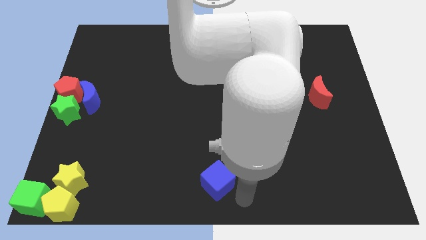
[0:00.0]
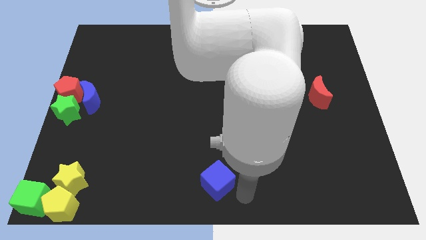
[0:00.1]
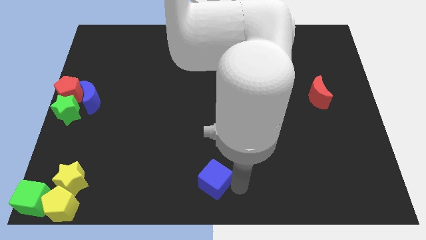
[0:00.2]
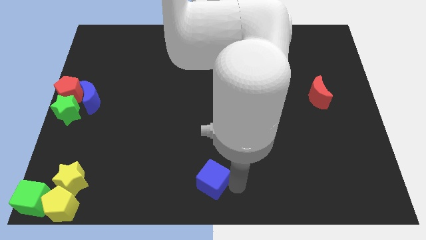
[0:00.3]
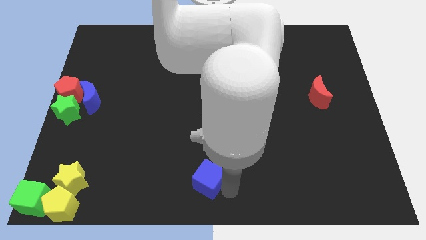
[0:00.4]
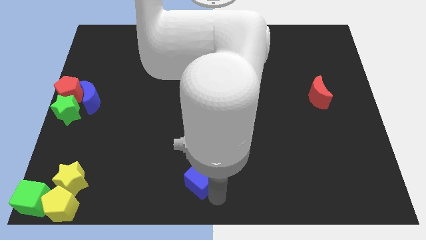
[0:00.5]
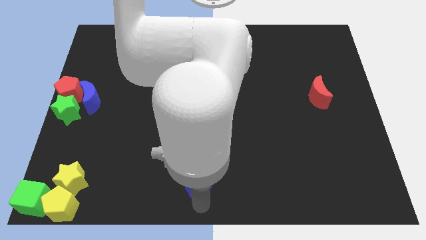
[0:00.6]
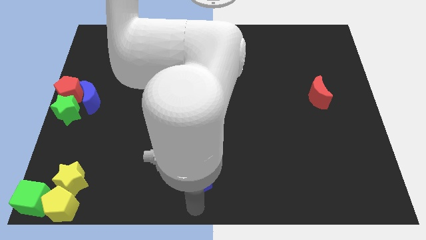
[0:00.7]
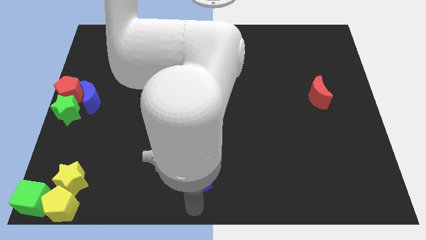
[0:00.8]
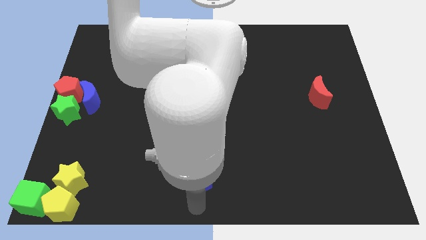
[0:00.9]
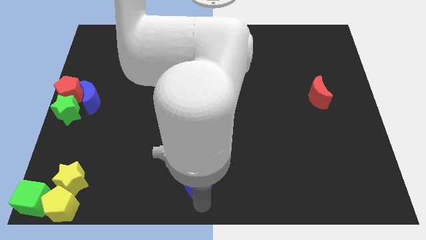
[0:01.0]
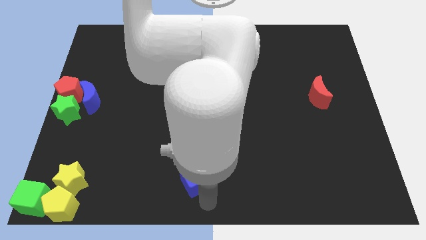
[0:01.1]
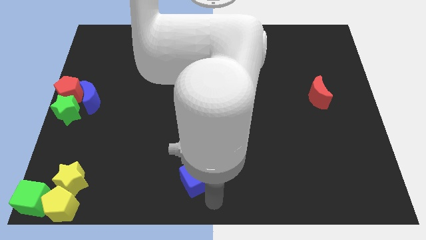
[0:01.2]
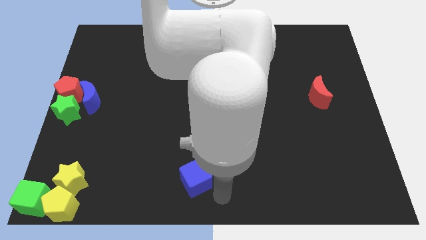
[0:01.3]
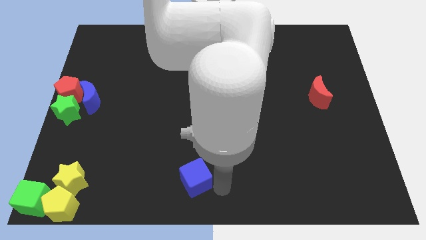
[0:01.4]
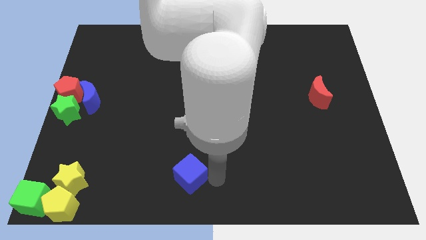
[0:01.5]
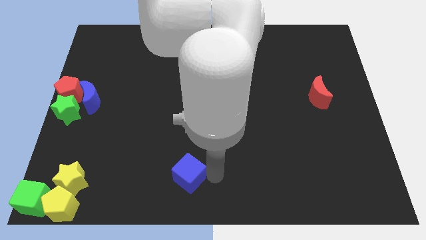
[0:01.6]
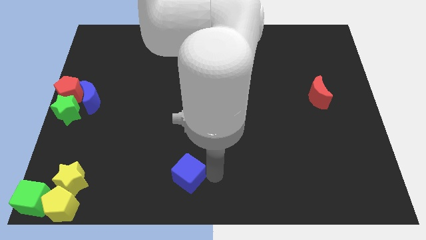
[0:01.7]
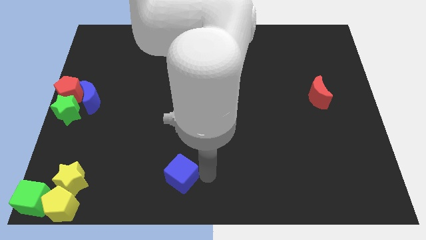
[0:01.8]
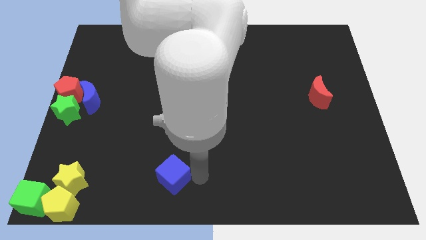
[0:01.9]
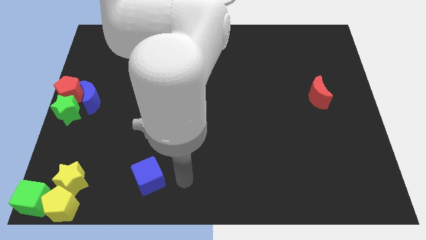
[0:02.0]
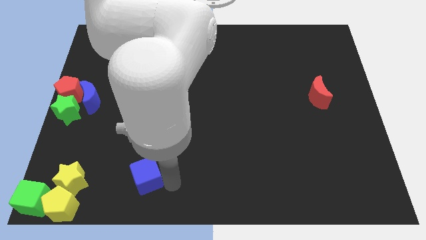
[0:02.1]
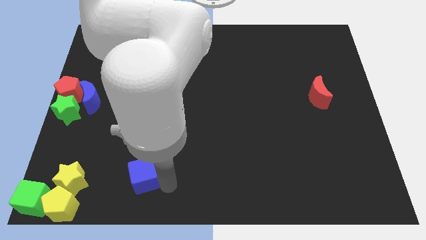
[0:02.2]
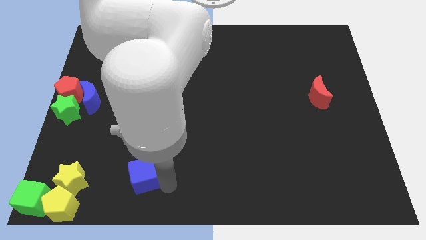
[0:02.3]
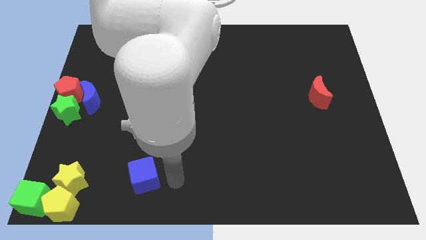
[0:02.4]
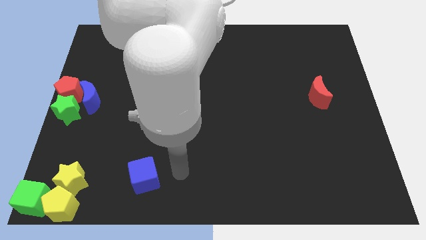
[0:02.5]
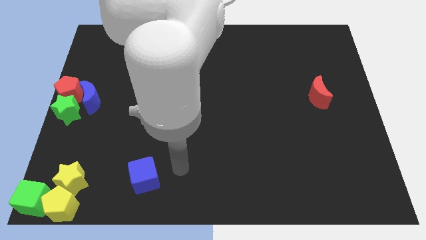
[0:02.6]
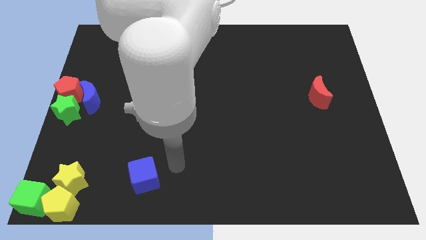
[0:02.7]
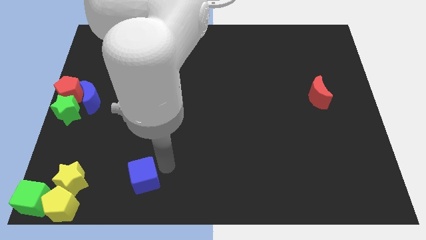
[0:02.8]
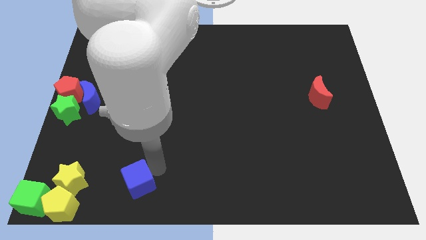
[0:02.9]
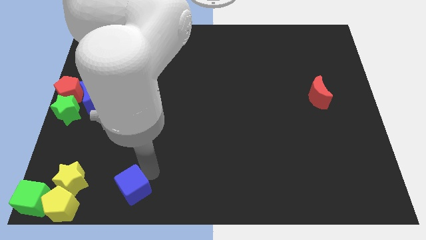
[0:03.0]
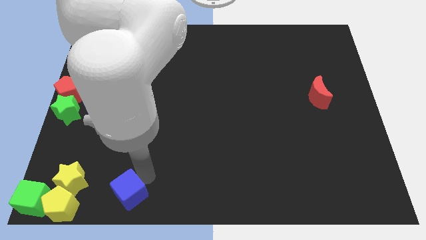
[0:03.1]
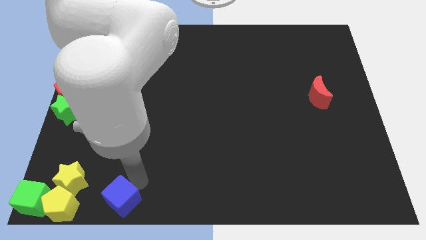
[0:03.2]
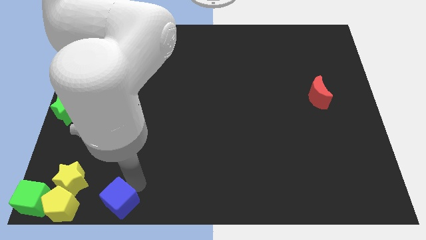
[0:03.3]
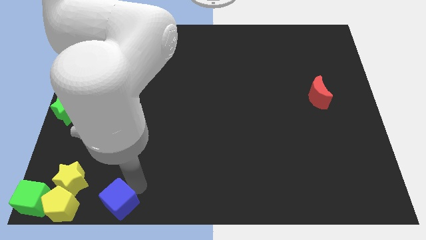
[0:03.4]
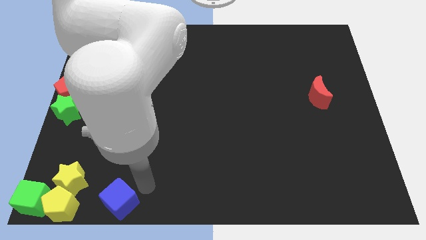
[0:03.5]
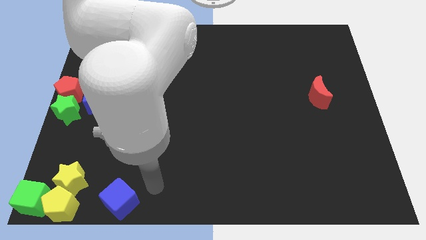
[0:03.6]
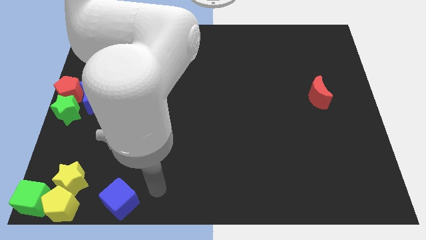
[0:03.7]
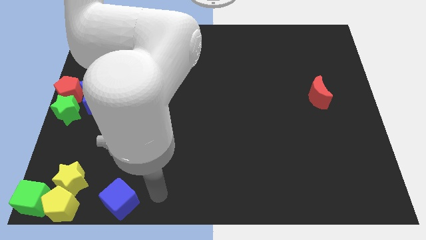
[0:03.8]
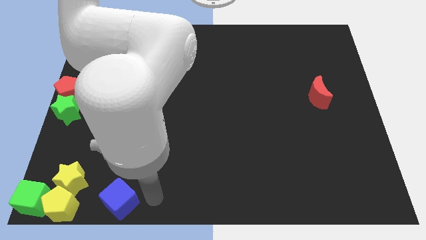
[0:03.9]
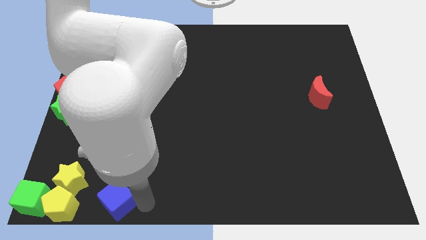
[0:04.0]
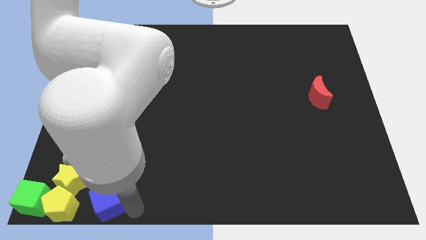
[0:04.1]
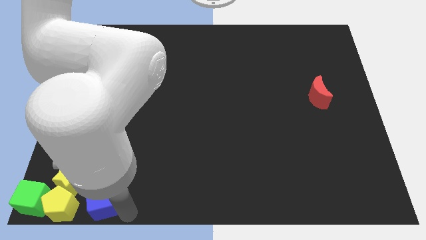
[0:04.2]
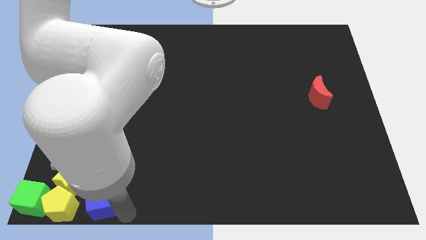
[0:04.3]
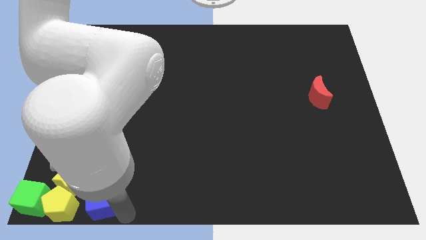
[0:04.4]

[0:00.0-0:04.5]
push the blue cube towards the right of yellow pentagon

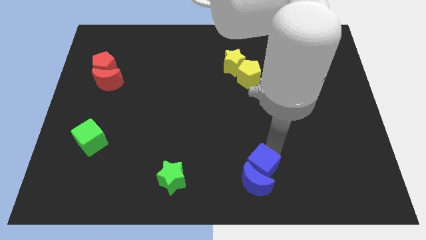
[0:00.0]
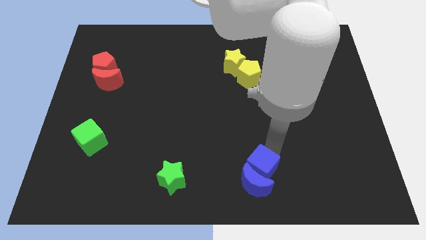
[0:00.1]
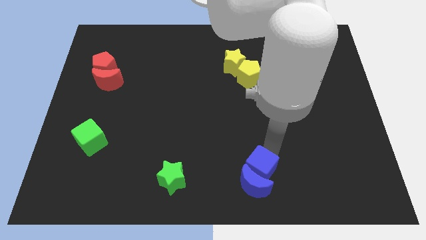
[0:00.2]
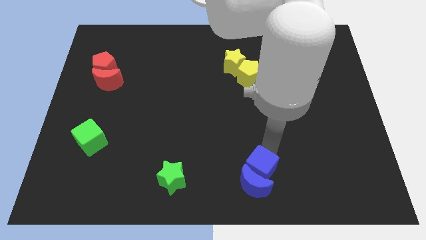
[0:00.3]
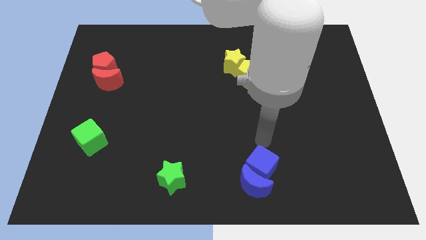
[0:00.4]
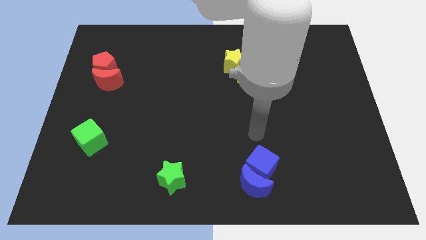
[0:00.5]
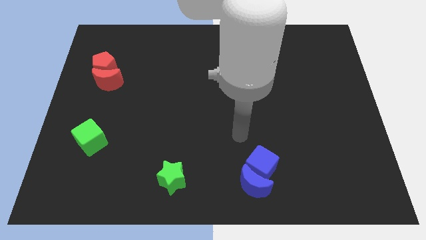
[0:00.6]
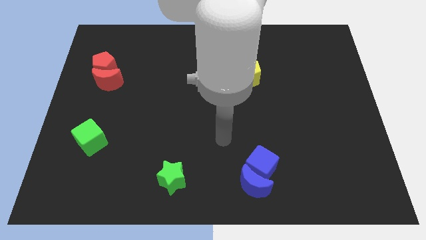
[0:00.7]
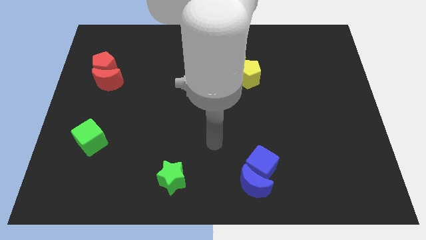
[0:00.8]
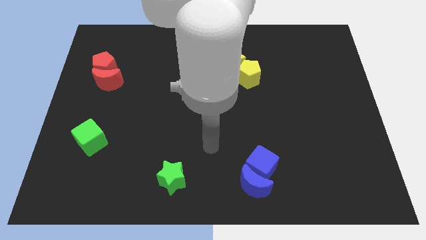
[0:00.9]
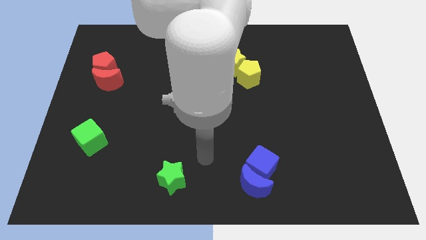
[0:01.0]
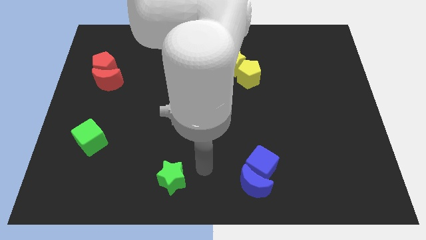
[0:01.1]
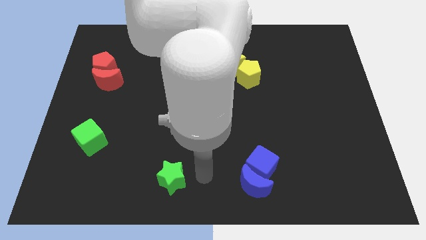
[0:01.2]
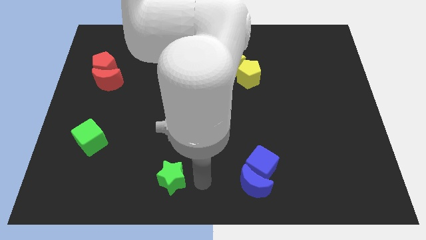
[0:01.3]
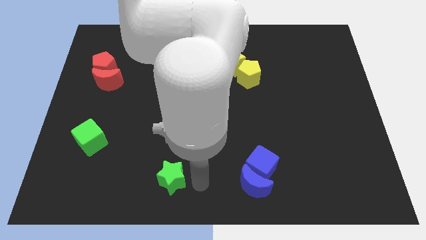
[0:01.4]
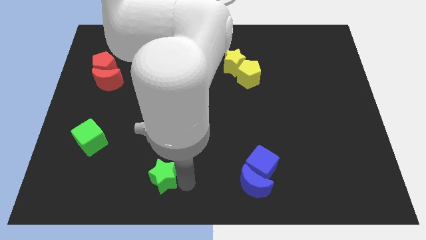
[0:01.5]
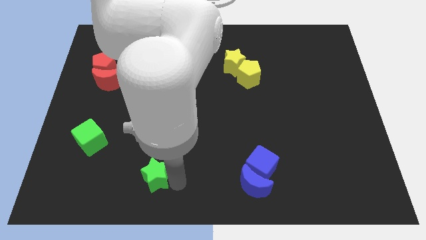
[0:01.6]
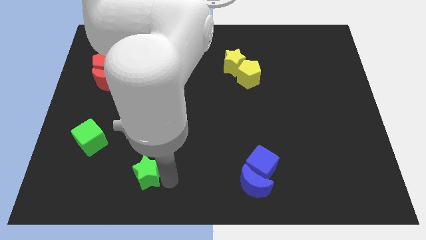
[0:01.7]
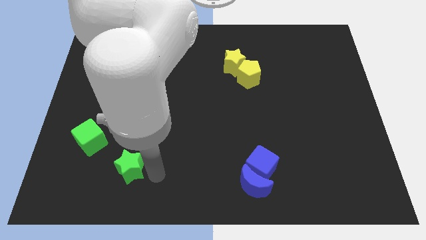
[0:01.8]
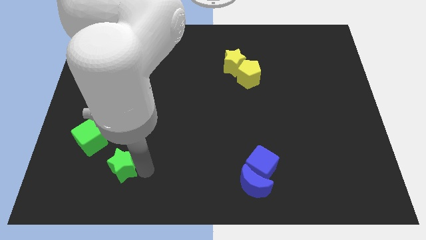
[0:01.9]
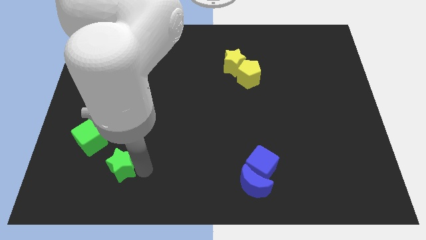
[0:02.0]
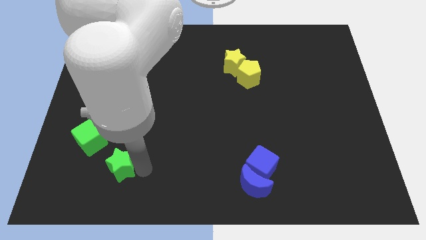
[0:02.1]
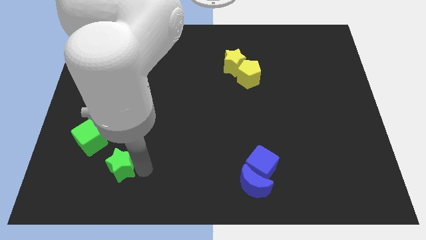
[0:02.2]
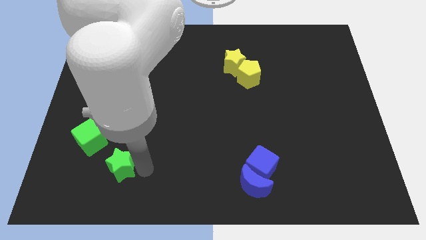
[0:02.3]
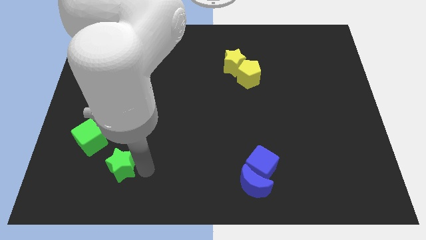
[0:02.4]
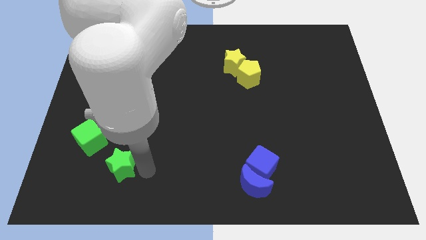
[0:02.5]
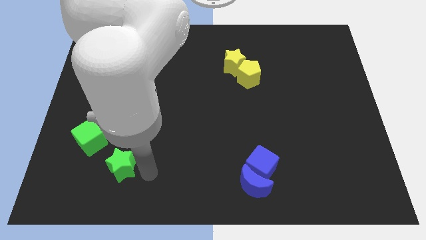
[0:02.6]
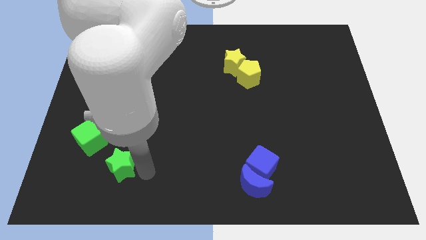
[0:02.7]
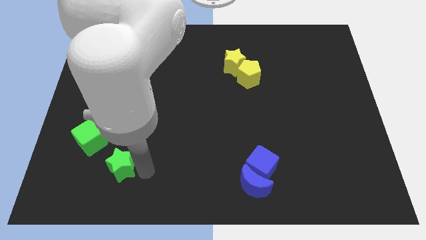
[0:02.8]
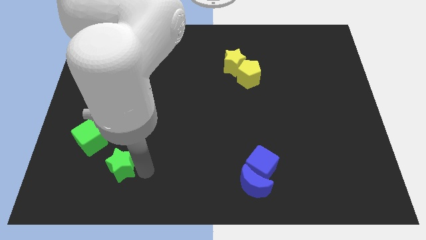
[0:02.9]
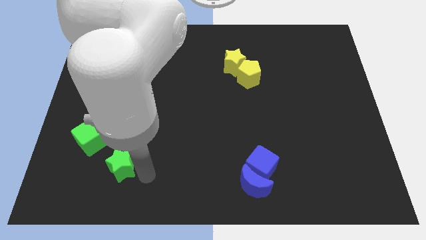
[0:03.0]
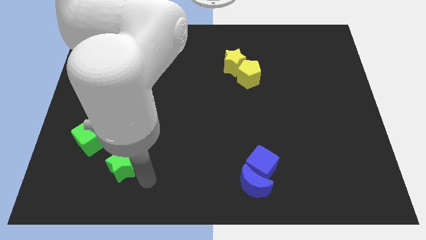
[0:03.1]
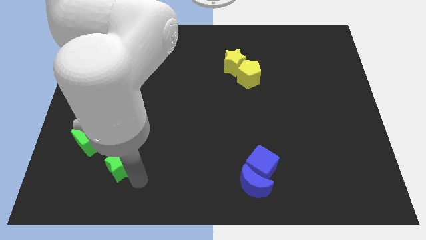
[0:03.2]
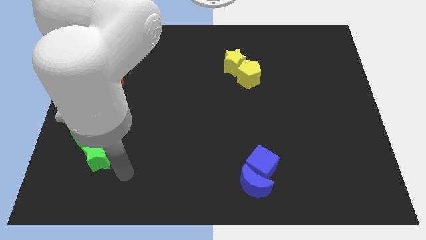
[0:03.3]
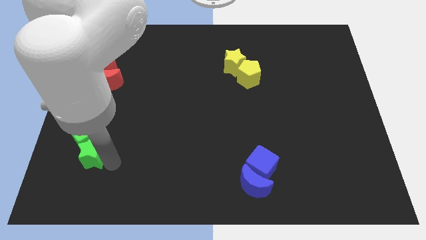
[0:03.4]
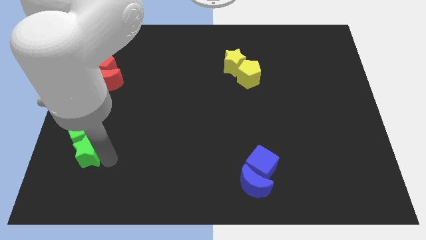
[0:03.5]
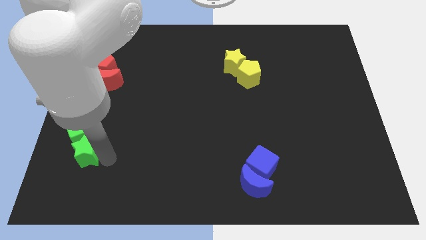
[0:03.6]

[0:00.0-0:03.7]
slide the green star into the bottom side of the green cube

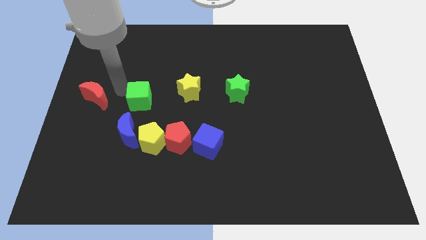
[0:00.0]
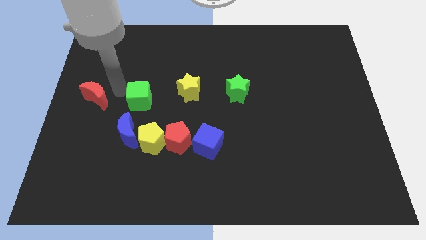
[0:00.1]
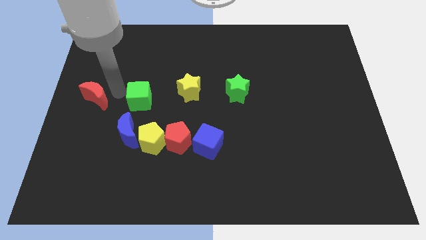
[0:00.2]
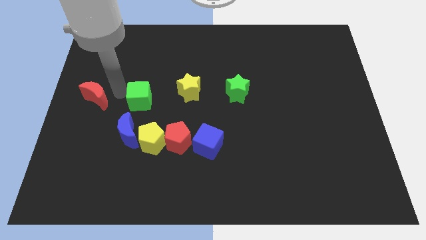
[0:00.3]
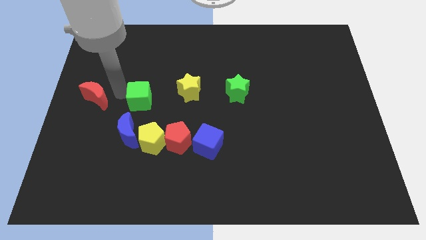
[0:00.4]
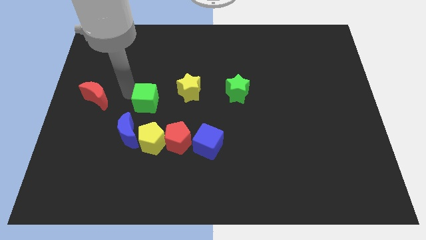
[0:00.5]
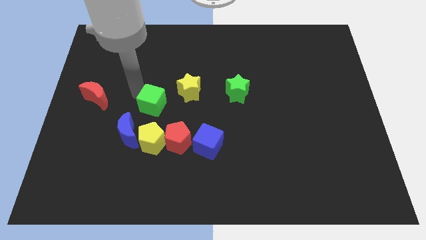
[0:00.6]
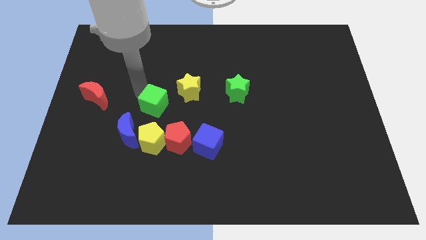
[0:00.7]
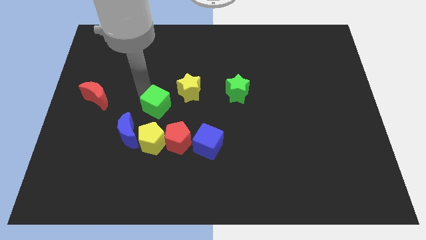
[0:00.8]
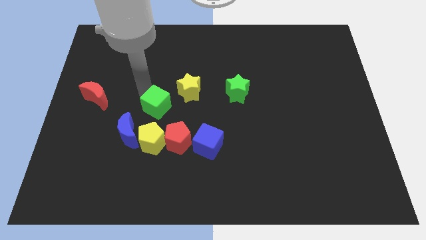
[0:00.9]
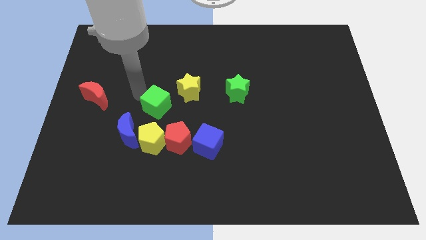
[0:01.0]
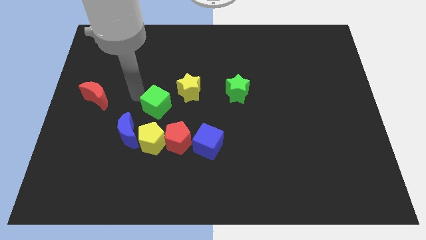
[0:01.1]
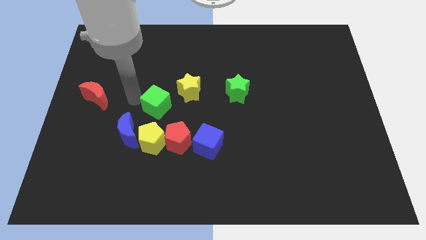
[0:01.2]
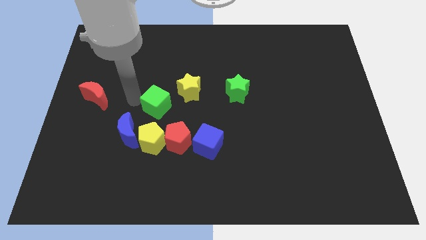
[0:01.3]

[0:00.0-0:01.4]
move the green cube vertically to the top of the yellow pentagon
